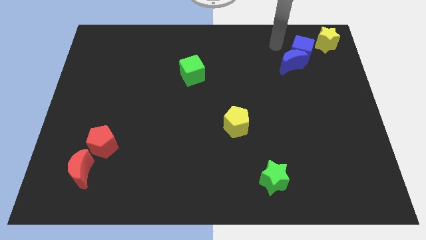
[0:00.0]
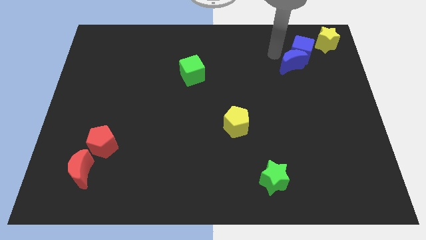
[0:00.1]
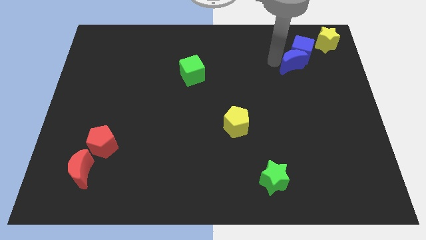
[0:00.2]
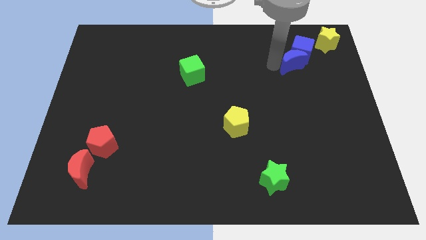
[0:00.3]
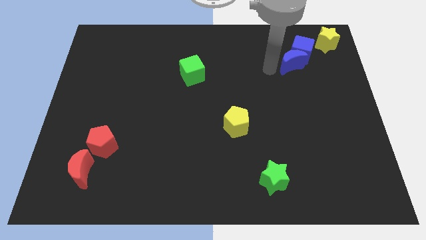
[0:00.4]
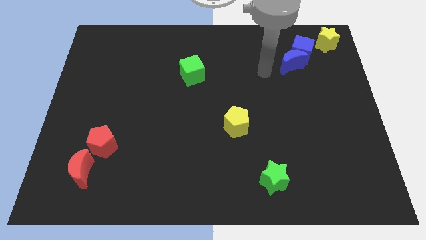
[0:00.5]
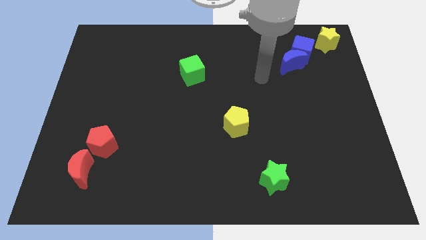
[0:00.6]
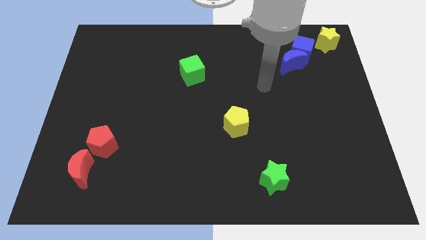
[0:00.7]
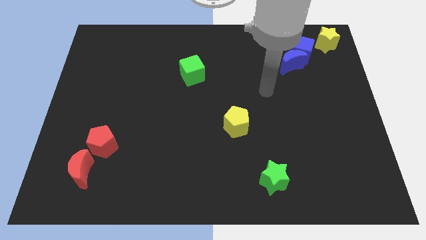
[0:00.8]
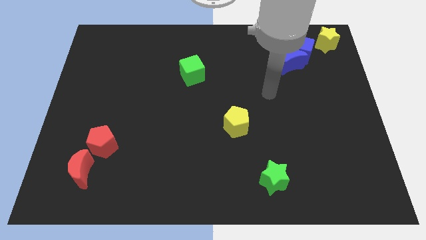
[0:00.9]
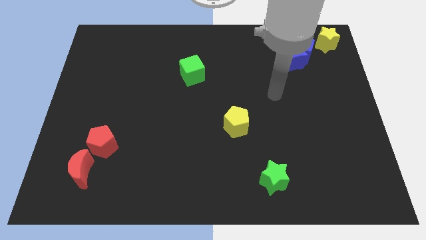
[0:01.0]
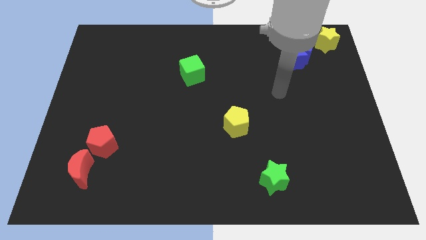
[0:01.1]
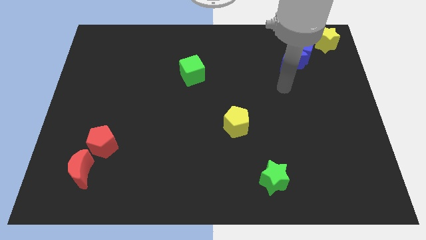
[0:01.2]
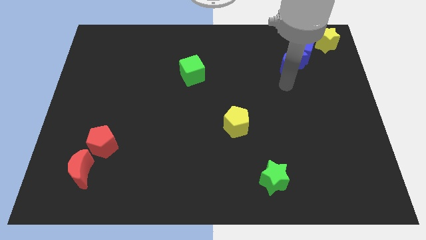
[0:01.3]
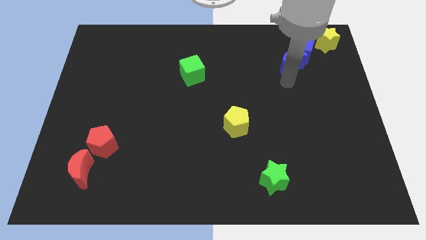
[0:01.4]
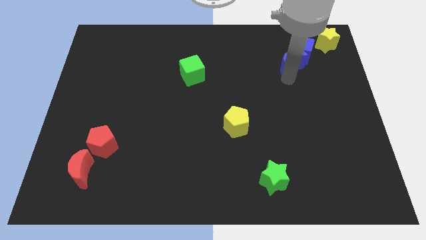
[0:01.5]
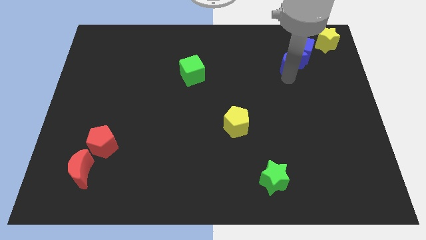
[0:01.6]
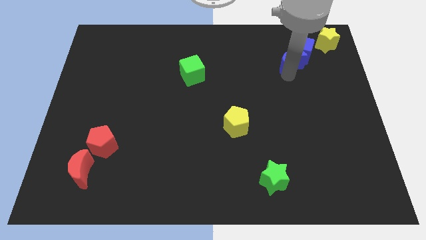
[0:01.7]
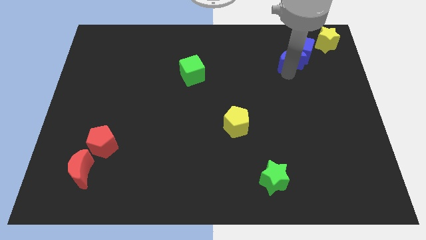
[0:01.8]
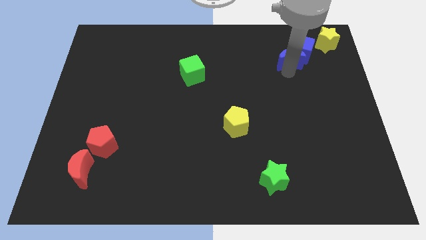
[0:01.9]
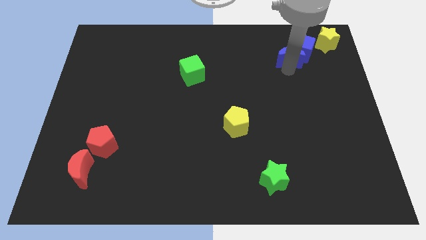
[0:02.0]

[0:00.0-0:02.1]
push yellow blocks upwards

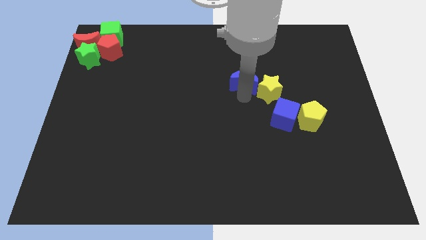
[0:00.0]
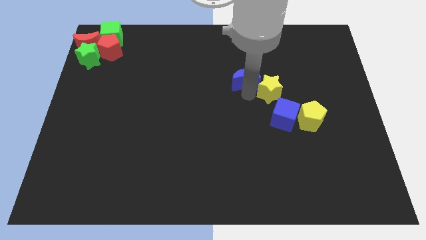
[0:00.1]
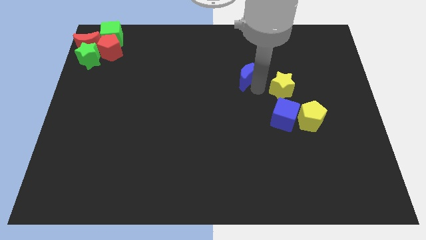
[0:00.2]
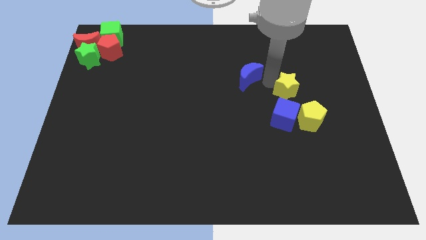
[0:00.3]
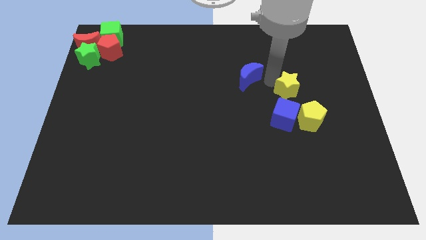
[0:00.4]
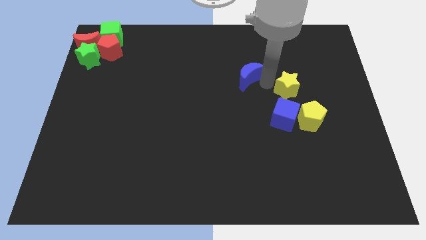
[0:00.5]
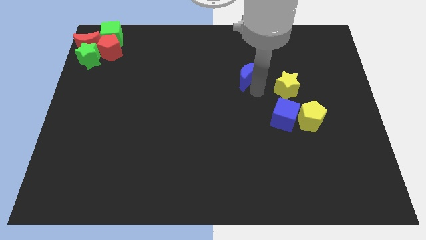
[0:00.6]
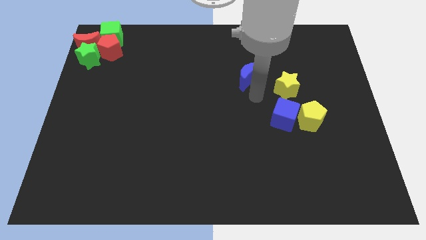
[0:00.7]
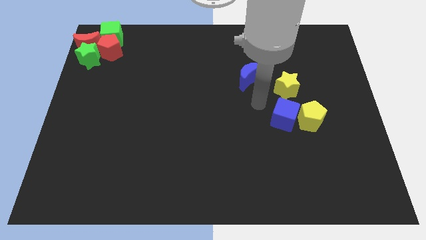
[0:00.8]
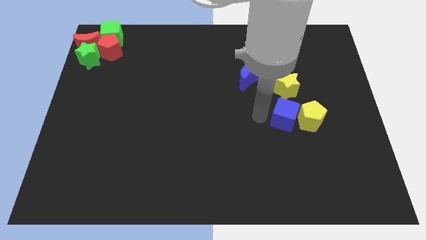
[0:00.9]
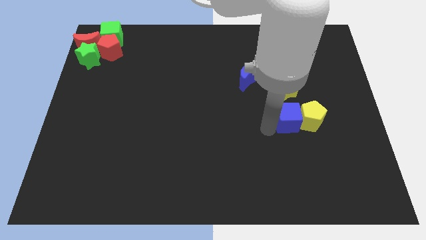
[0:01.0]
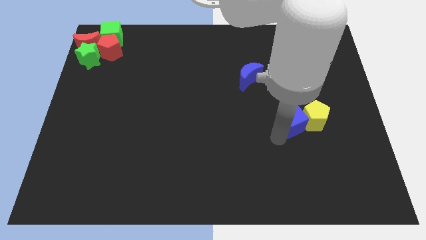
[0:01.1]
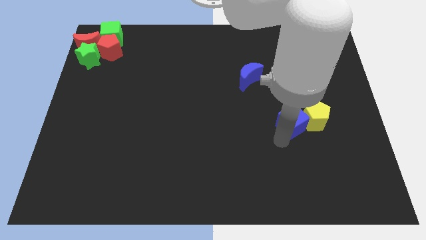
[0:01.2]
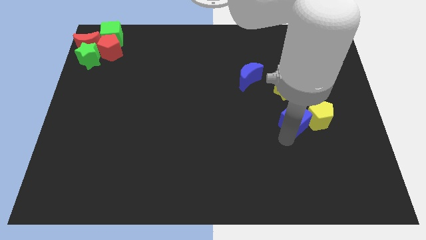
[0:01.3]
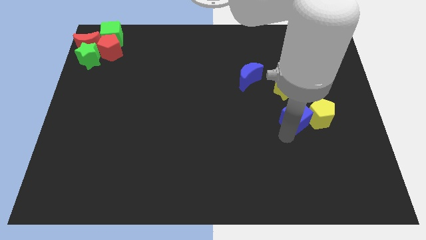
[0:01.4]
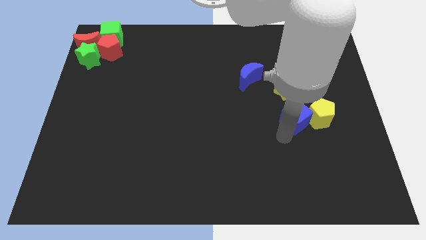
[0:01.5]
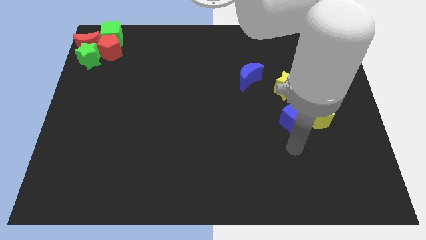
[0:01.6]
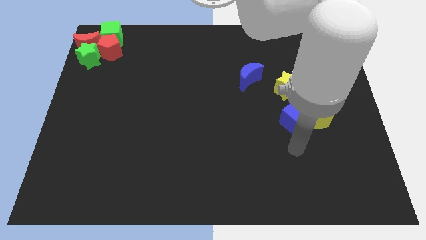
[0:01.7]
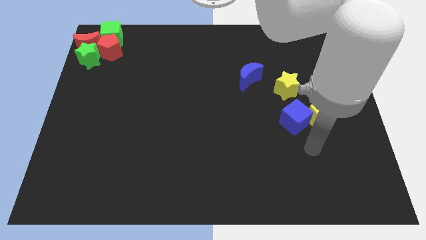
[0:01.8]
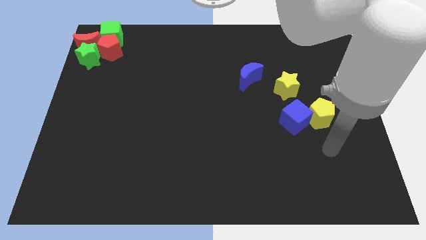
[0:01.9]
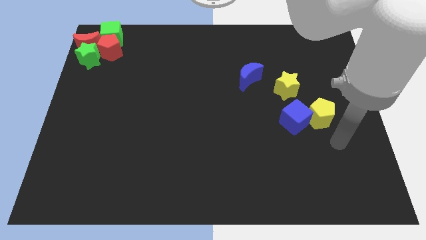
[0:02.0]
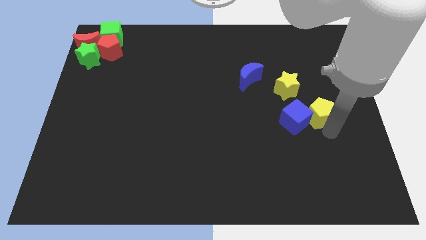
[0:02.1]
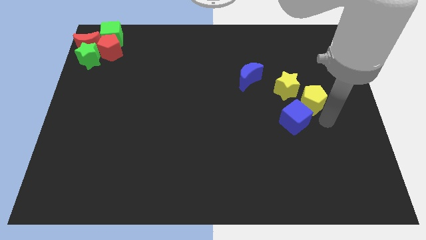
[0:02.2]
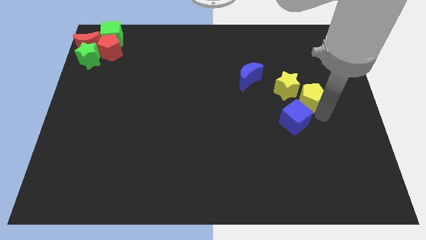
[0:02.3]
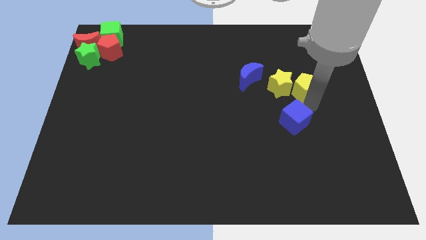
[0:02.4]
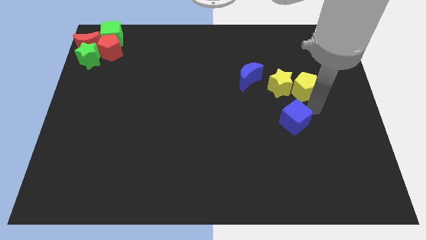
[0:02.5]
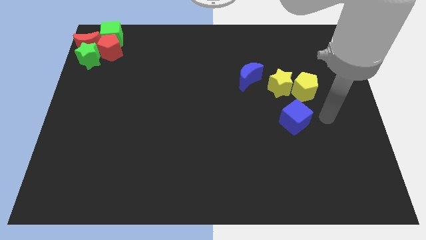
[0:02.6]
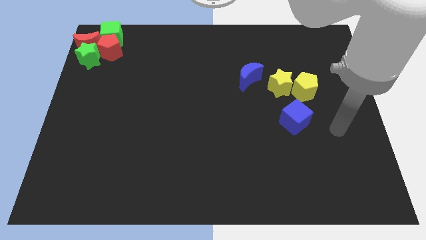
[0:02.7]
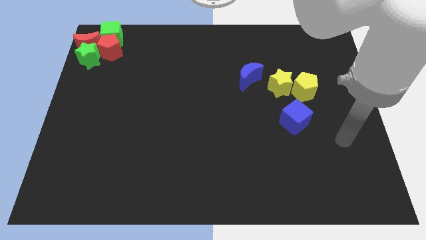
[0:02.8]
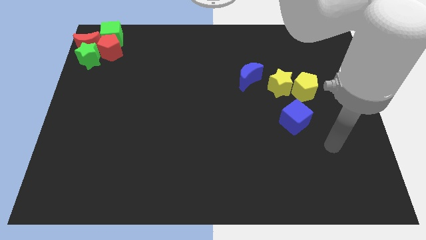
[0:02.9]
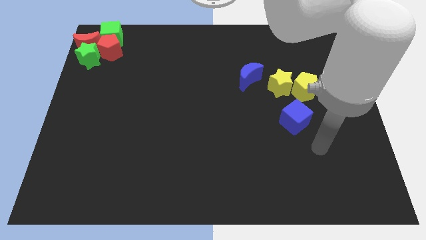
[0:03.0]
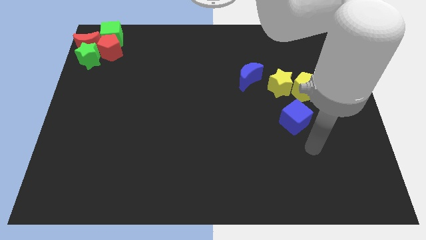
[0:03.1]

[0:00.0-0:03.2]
take the yellow pentagon close to the right side of the yellow star

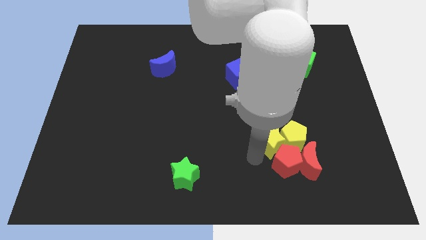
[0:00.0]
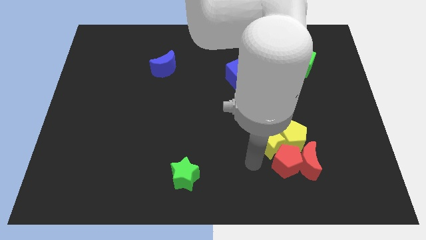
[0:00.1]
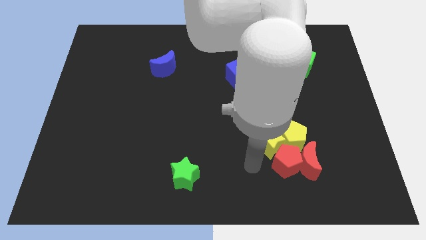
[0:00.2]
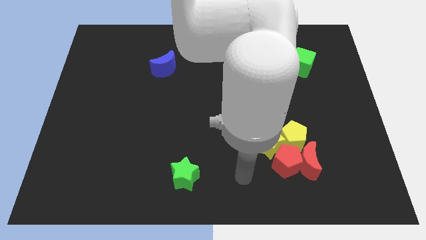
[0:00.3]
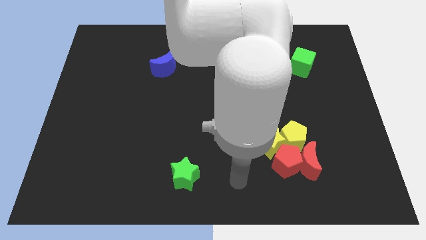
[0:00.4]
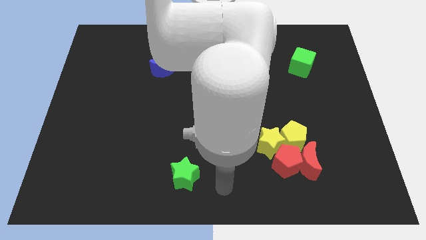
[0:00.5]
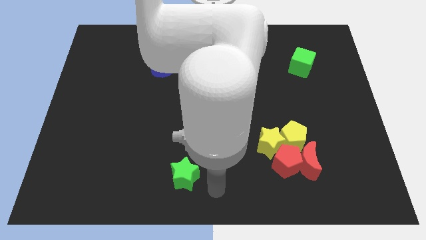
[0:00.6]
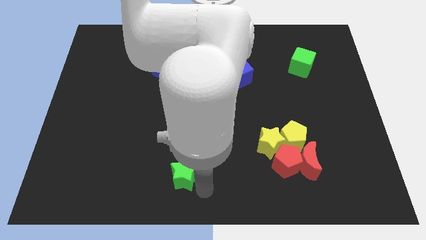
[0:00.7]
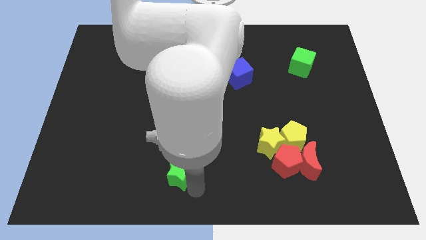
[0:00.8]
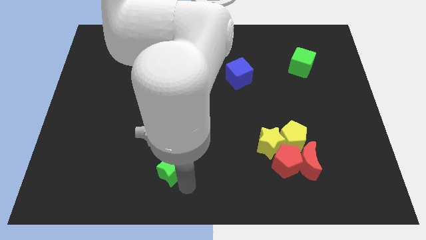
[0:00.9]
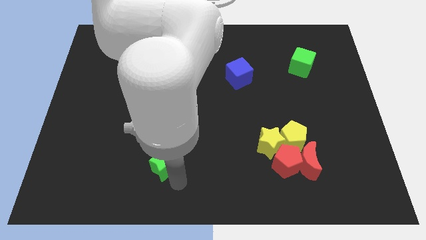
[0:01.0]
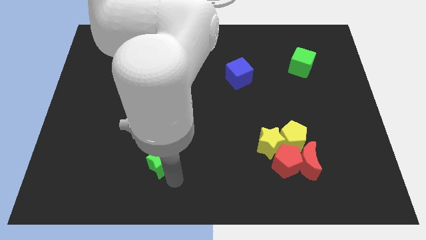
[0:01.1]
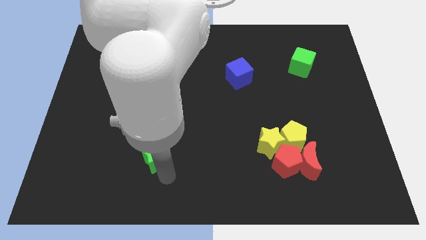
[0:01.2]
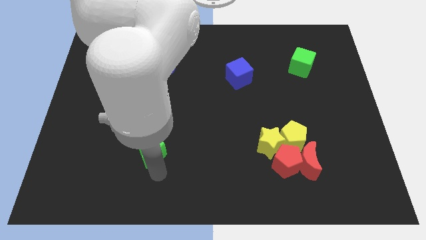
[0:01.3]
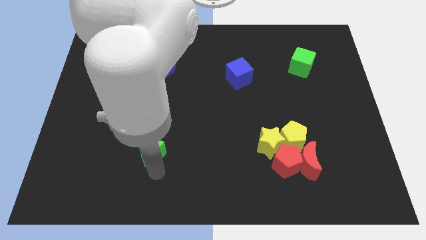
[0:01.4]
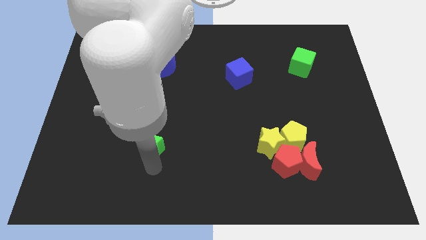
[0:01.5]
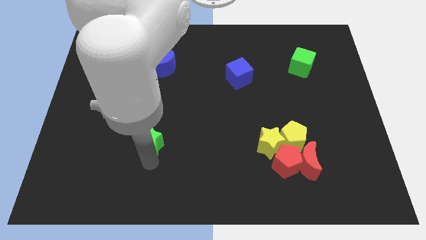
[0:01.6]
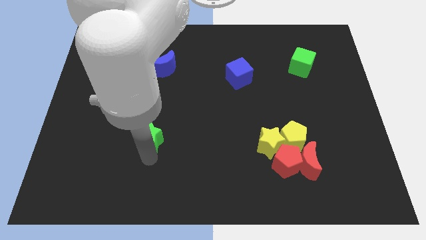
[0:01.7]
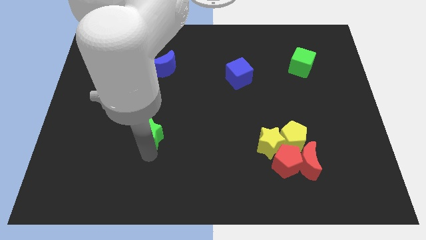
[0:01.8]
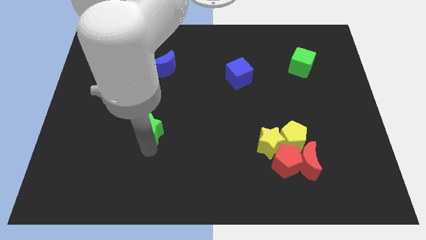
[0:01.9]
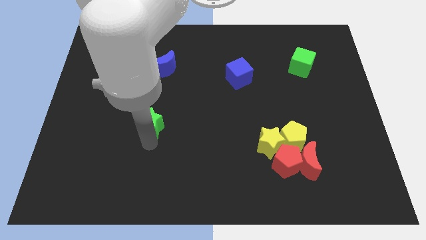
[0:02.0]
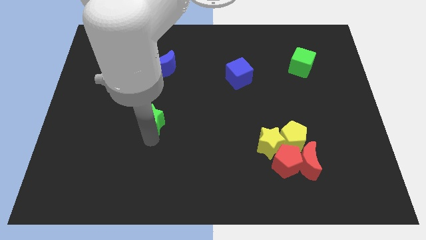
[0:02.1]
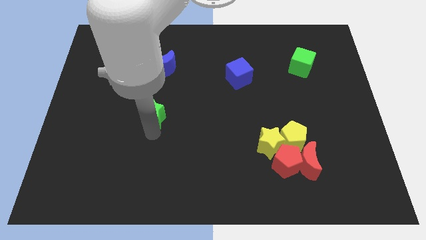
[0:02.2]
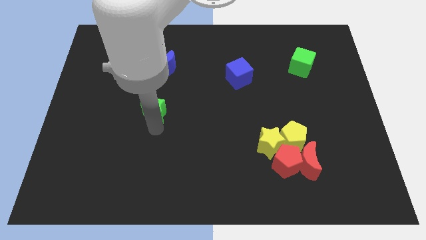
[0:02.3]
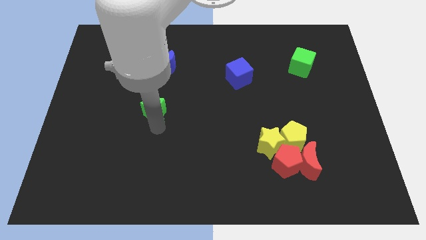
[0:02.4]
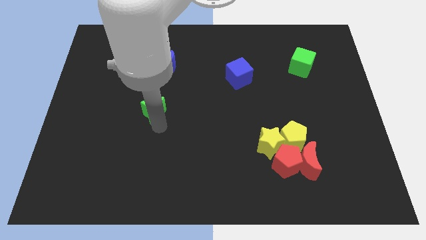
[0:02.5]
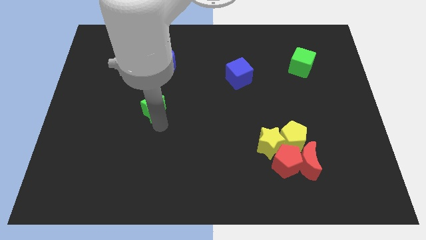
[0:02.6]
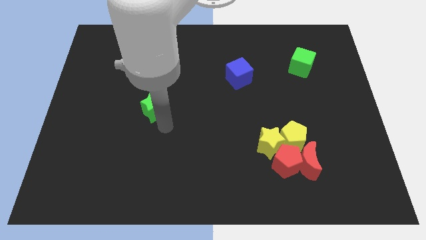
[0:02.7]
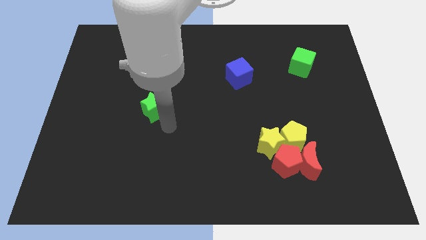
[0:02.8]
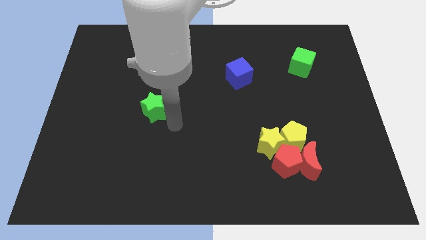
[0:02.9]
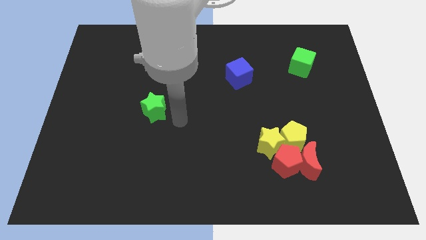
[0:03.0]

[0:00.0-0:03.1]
move the green star to the bottom of the blue crescent

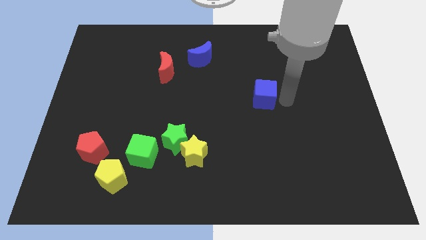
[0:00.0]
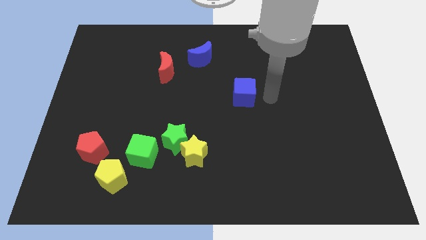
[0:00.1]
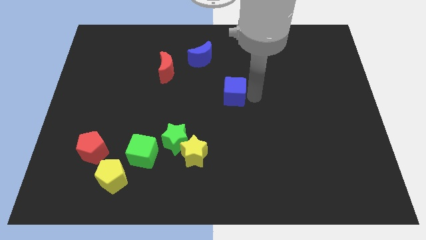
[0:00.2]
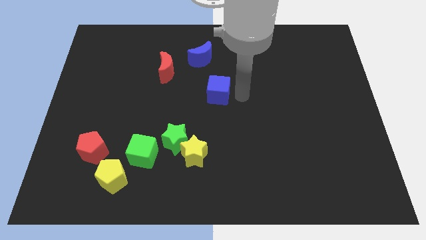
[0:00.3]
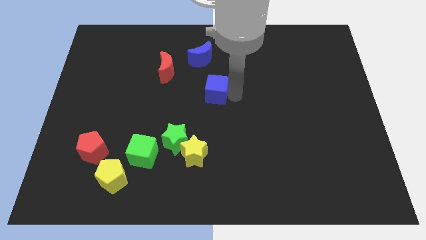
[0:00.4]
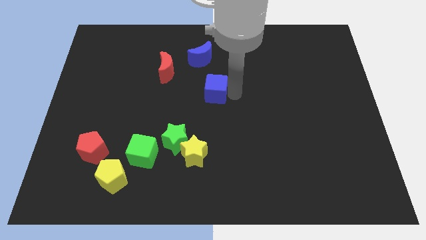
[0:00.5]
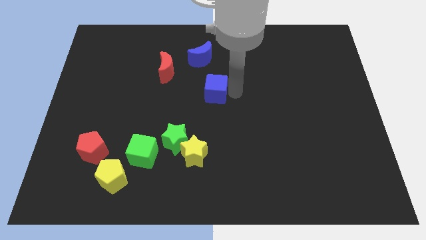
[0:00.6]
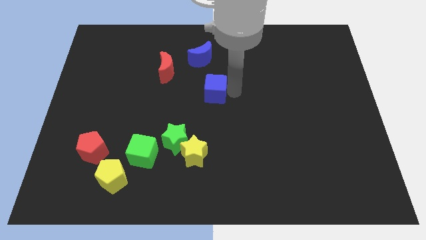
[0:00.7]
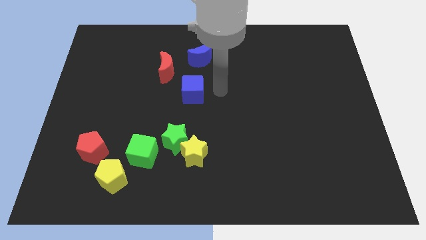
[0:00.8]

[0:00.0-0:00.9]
place the blue cube below the blue crescent
